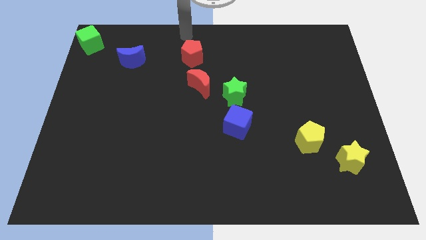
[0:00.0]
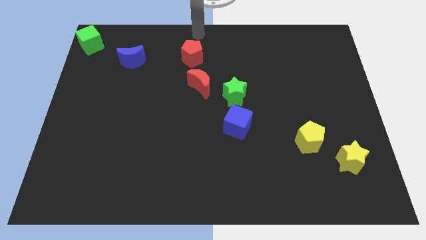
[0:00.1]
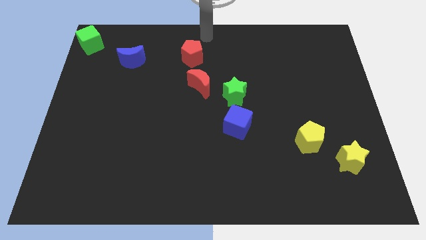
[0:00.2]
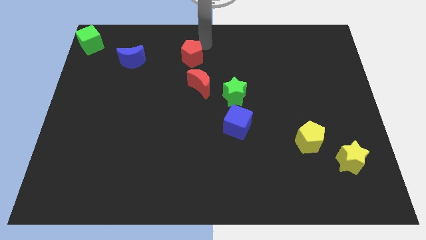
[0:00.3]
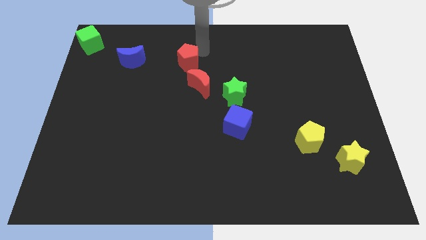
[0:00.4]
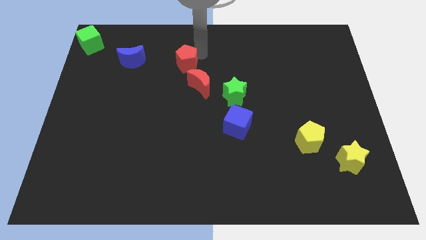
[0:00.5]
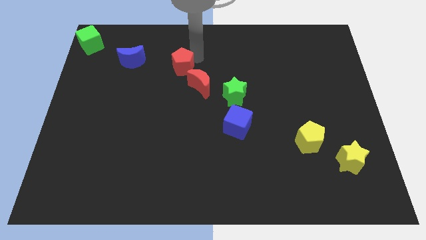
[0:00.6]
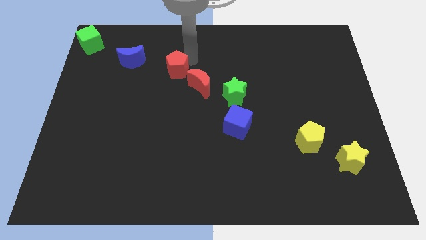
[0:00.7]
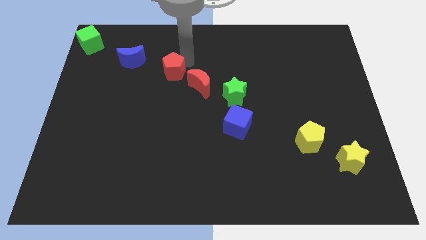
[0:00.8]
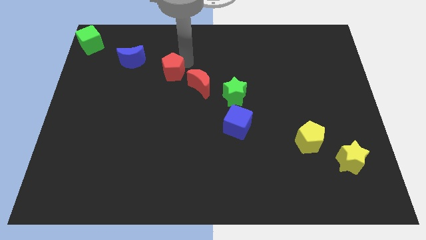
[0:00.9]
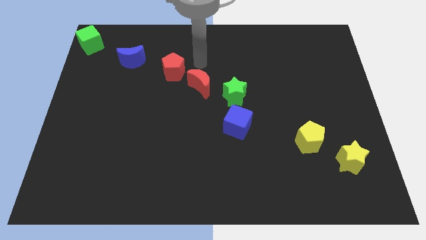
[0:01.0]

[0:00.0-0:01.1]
place the red pentagon diagonally top left of the red moon

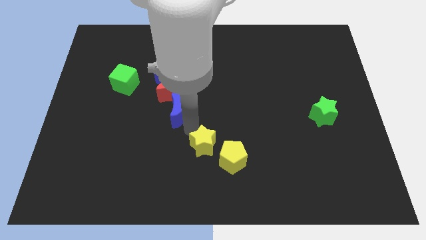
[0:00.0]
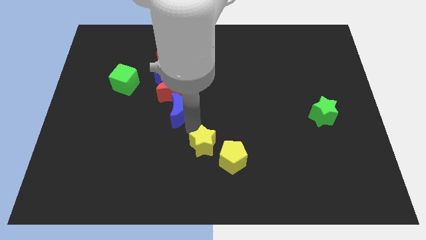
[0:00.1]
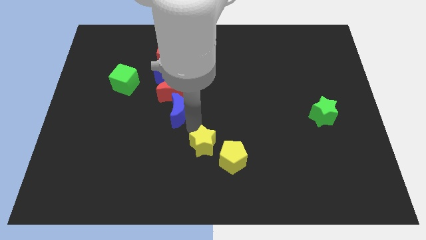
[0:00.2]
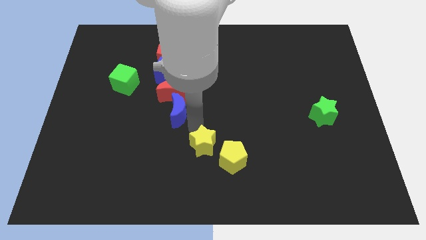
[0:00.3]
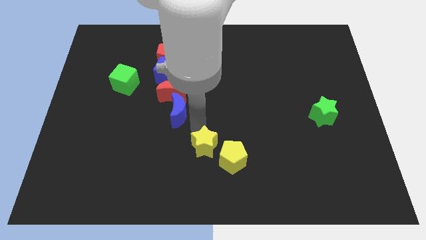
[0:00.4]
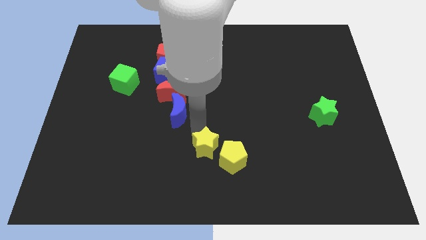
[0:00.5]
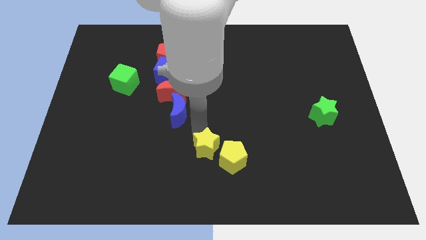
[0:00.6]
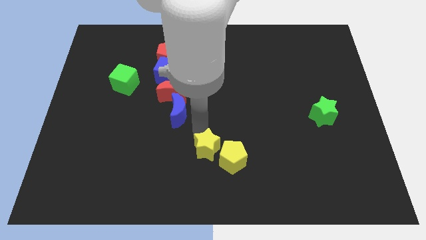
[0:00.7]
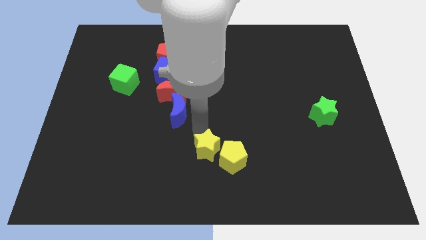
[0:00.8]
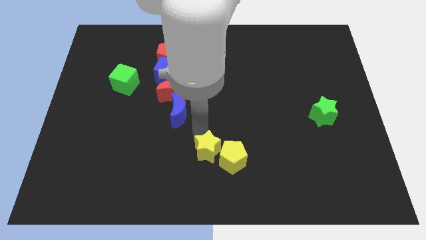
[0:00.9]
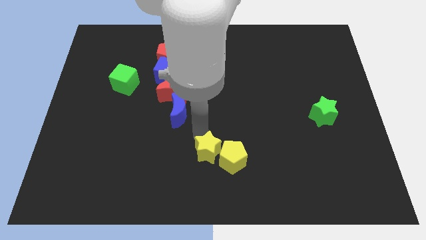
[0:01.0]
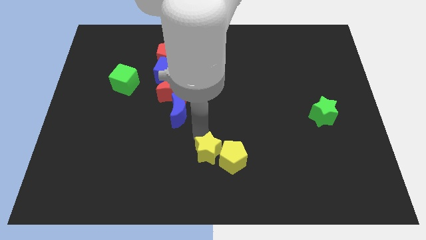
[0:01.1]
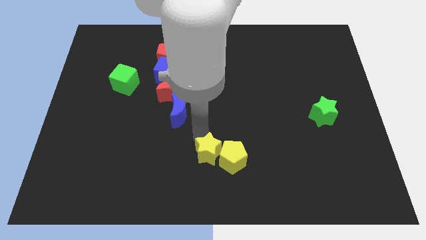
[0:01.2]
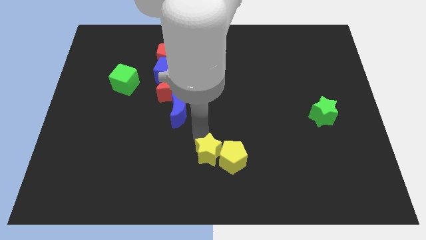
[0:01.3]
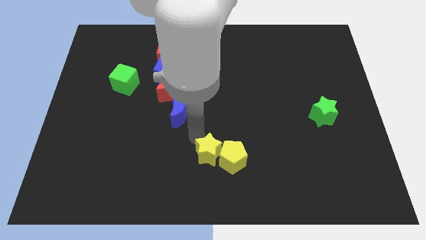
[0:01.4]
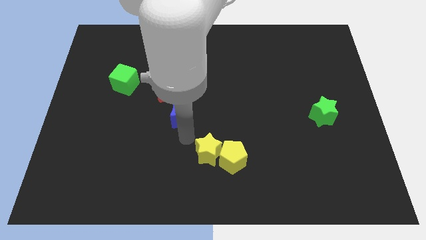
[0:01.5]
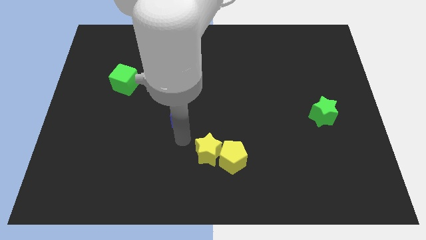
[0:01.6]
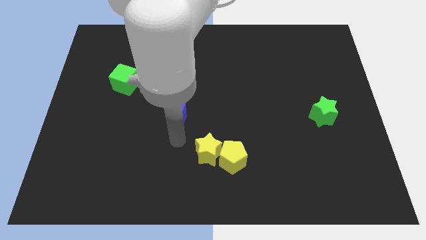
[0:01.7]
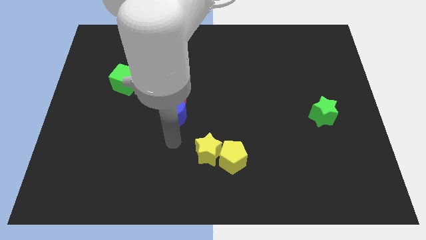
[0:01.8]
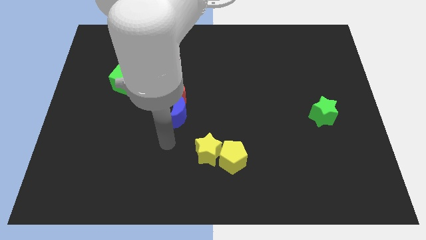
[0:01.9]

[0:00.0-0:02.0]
move the yellow star to the left of the yellow pentagon

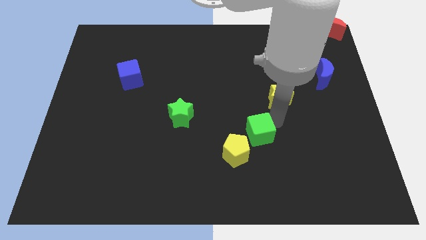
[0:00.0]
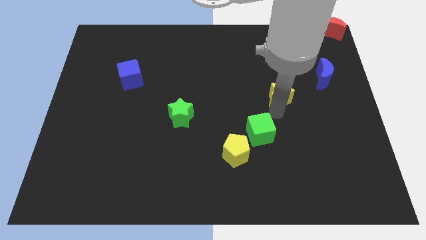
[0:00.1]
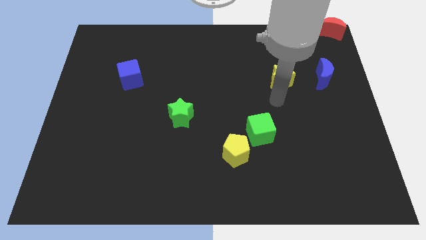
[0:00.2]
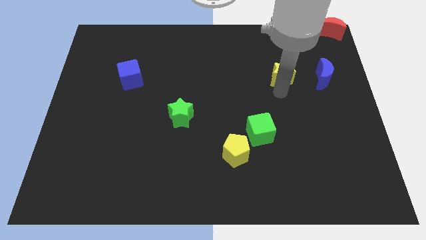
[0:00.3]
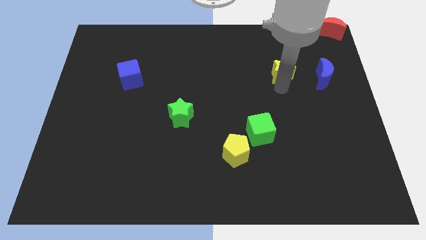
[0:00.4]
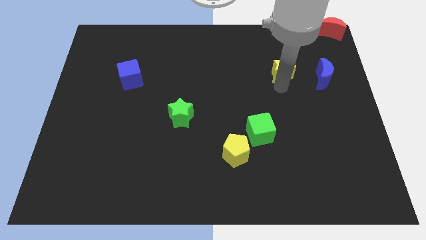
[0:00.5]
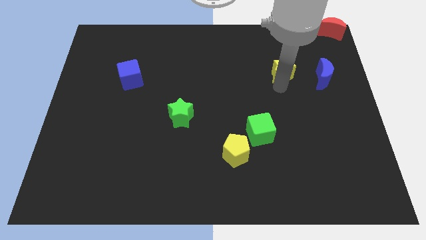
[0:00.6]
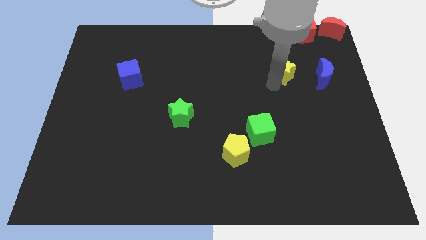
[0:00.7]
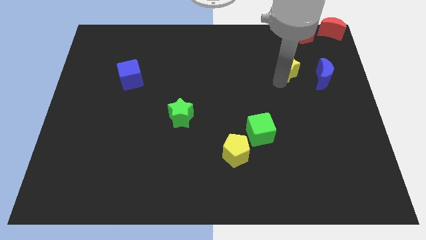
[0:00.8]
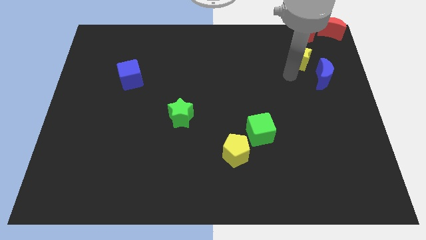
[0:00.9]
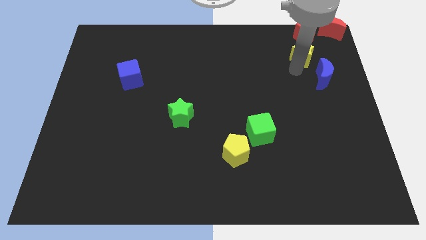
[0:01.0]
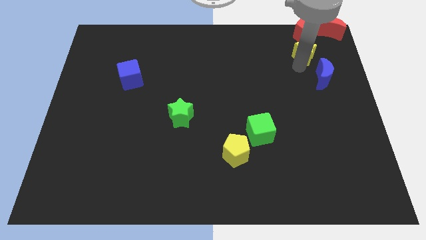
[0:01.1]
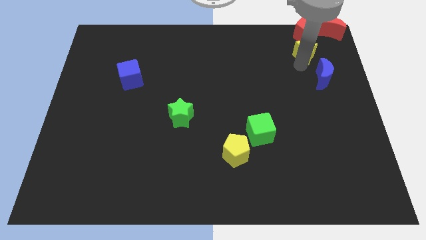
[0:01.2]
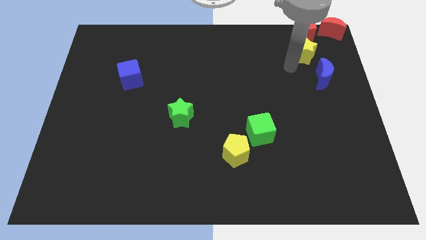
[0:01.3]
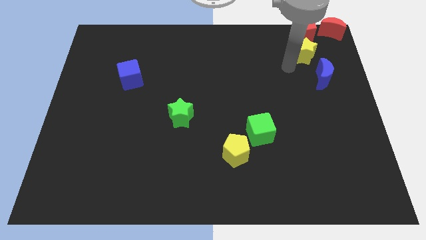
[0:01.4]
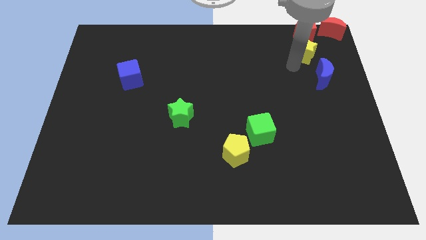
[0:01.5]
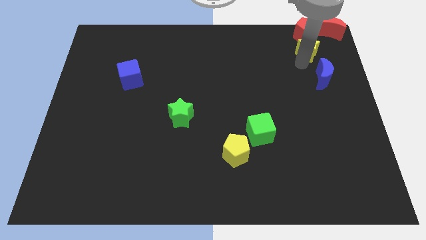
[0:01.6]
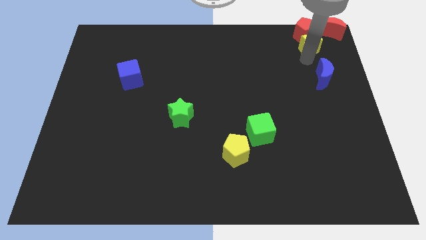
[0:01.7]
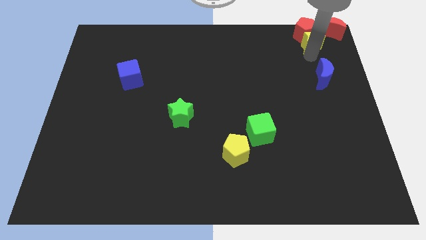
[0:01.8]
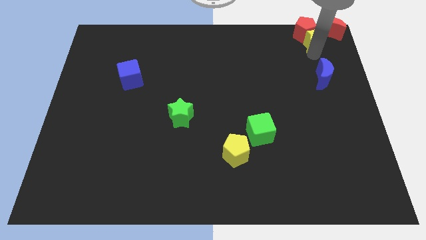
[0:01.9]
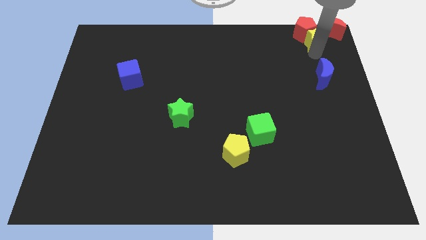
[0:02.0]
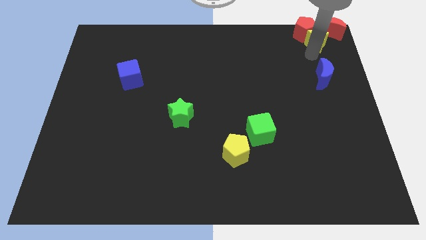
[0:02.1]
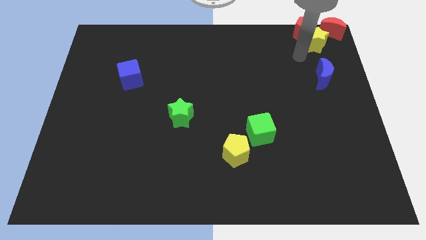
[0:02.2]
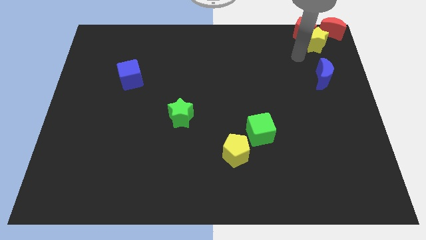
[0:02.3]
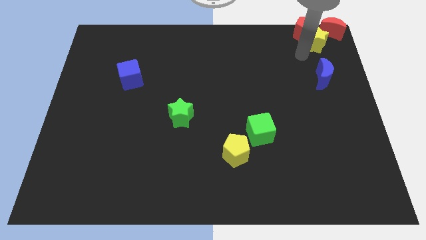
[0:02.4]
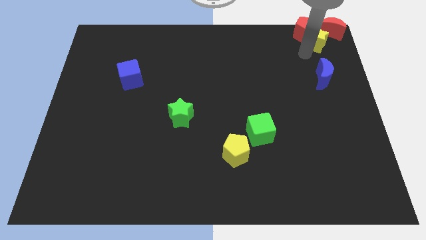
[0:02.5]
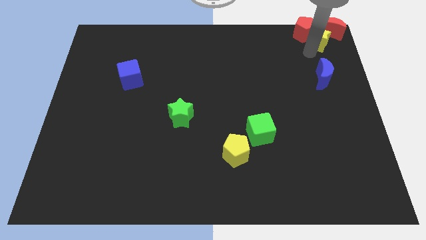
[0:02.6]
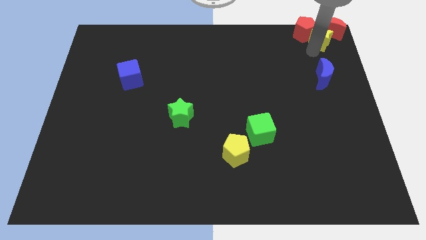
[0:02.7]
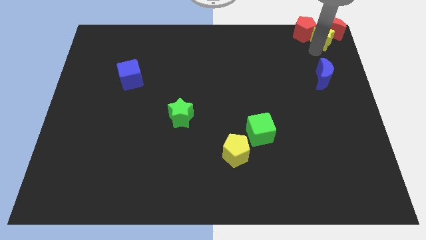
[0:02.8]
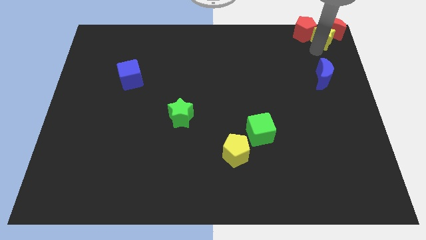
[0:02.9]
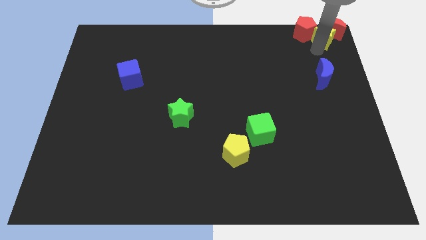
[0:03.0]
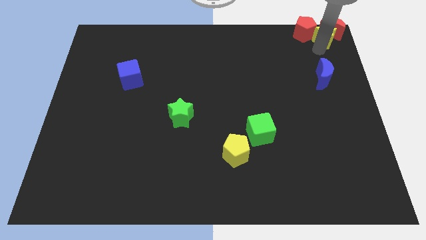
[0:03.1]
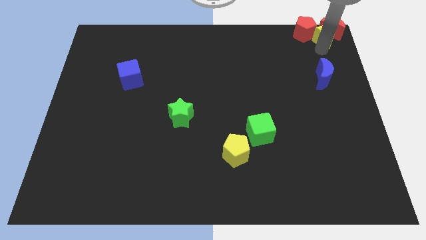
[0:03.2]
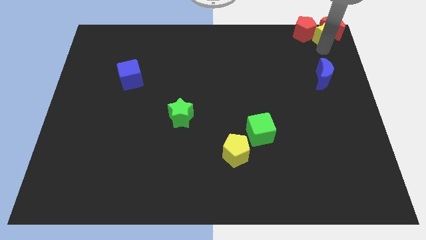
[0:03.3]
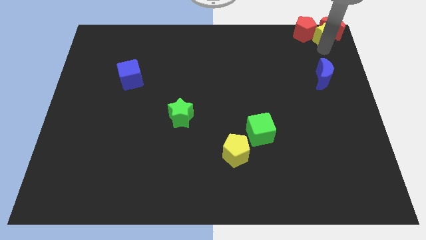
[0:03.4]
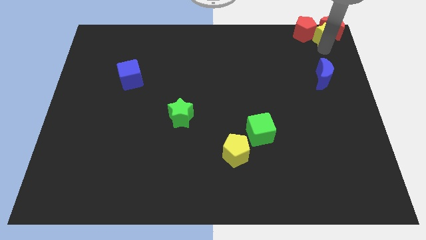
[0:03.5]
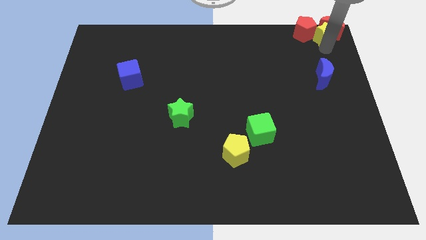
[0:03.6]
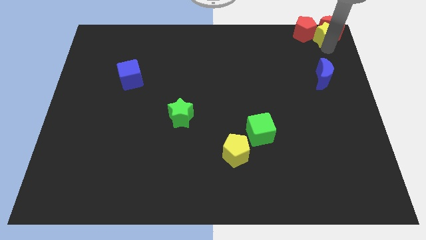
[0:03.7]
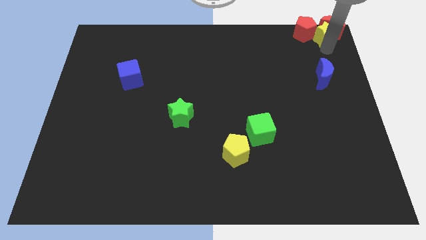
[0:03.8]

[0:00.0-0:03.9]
push the yellow star into red blocks

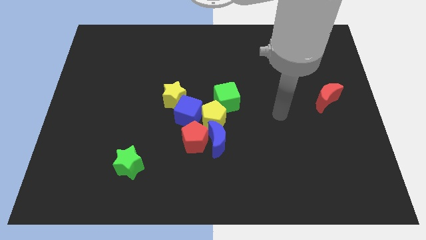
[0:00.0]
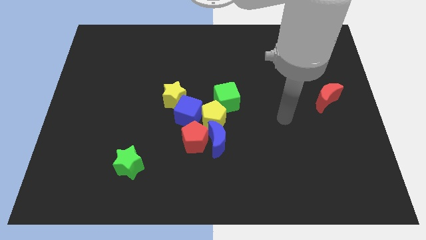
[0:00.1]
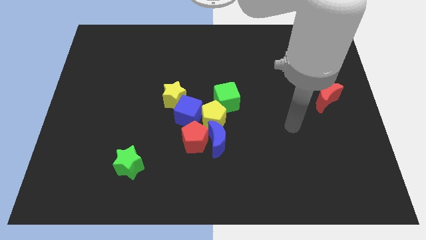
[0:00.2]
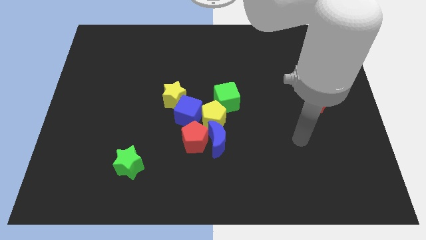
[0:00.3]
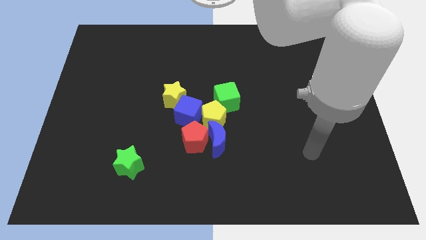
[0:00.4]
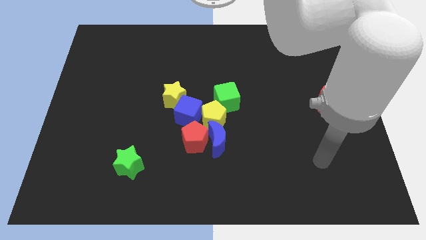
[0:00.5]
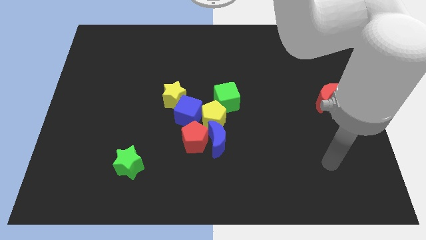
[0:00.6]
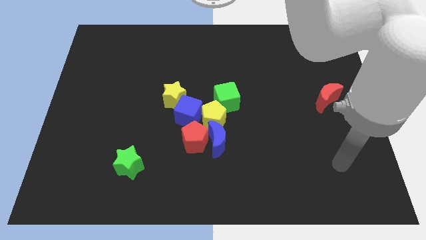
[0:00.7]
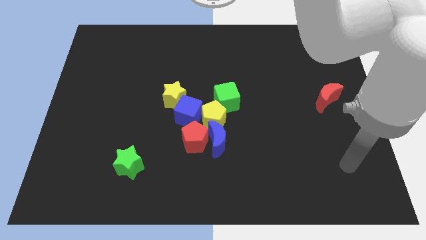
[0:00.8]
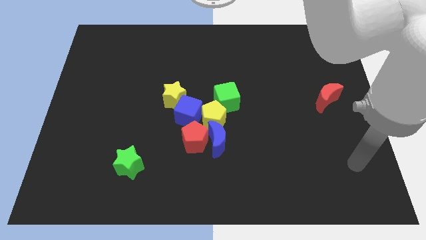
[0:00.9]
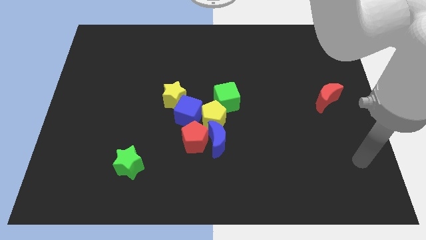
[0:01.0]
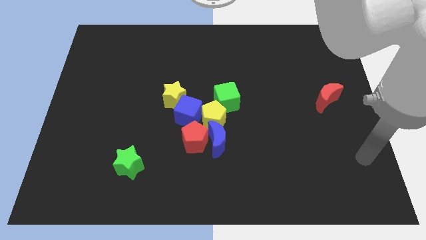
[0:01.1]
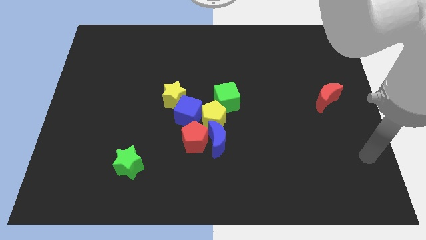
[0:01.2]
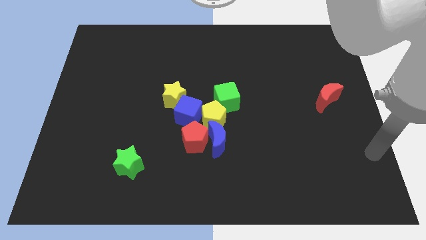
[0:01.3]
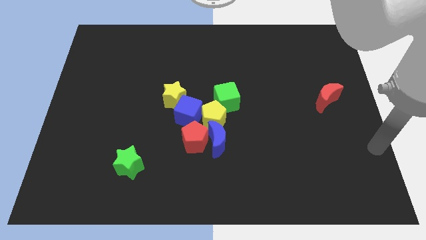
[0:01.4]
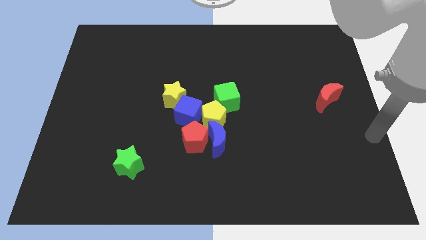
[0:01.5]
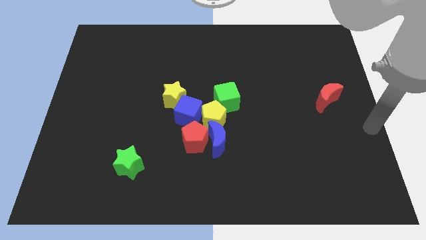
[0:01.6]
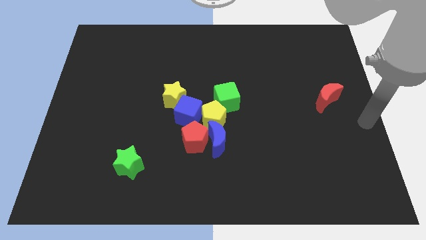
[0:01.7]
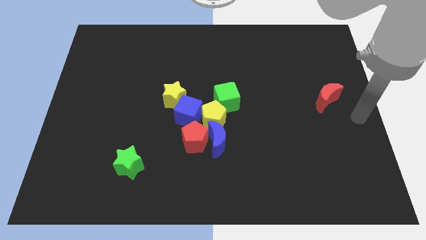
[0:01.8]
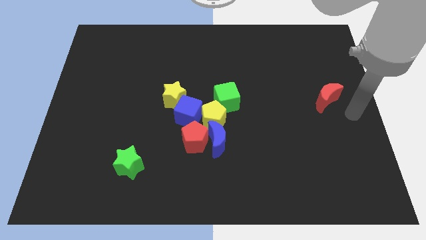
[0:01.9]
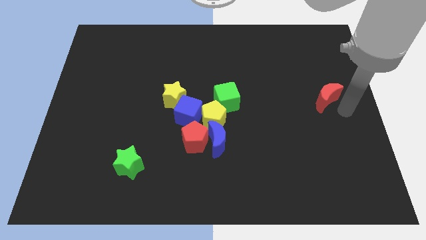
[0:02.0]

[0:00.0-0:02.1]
move your arm towards the red crescent
